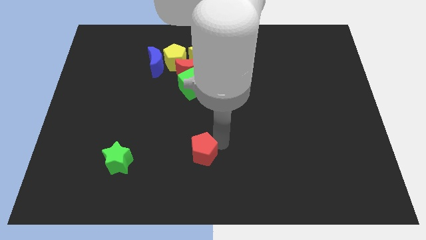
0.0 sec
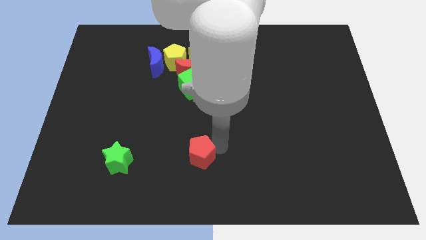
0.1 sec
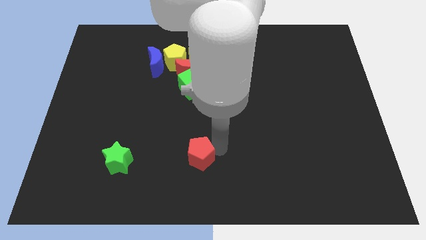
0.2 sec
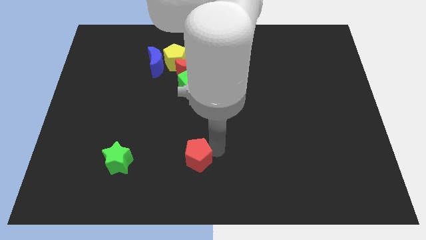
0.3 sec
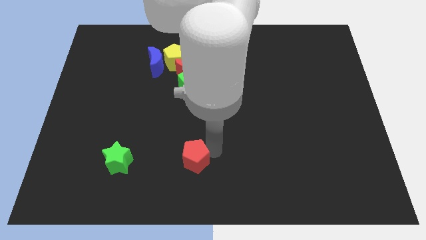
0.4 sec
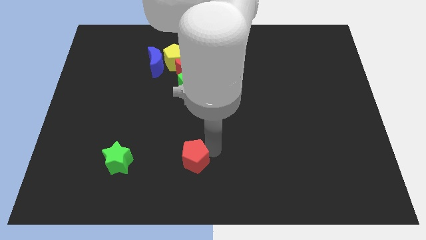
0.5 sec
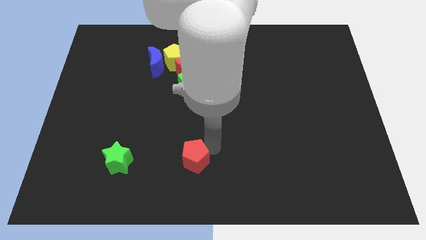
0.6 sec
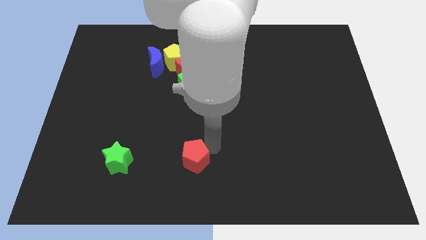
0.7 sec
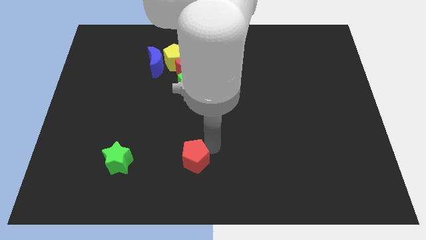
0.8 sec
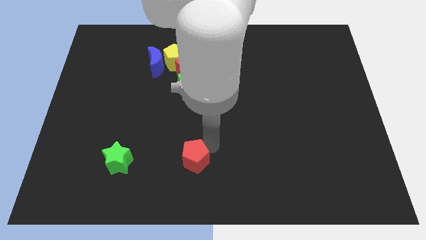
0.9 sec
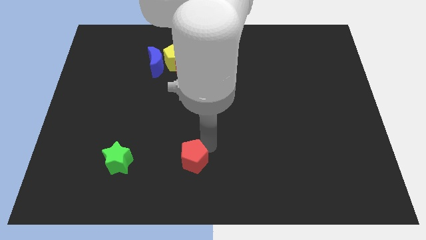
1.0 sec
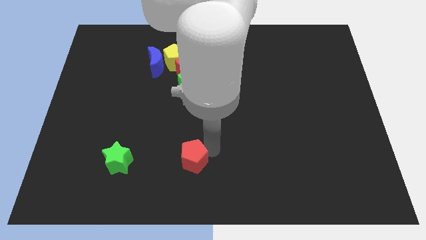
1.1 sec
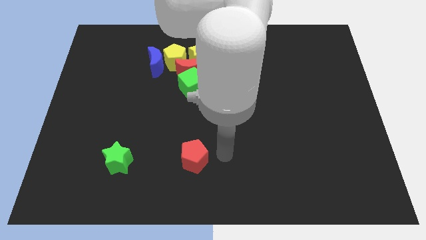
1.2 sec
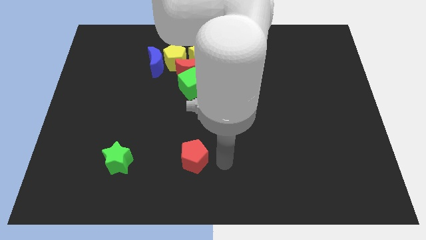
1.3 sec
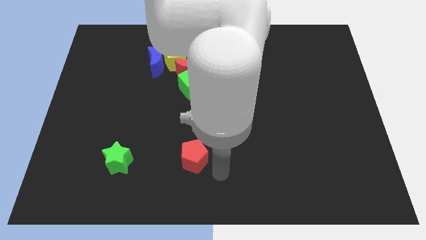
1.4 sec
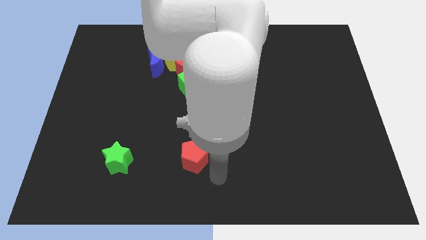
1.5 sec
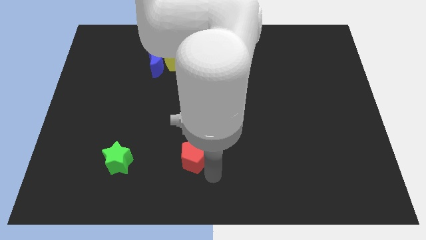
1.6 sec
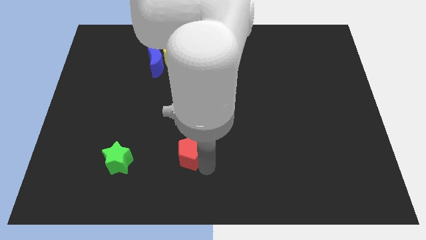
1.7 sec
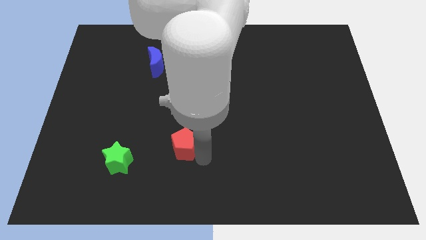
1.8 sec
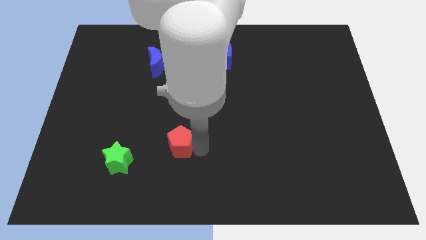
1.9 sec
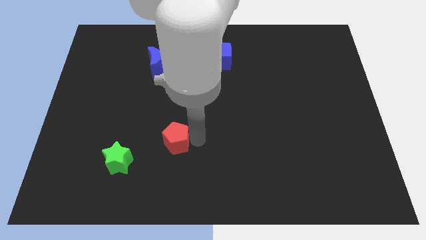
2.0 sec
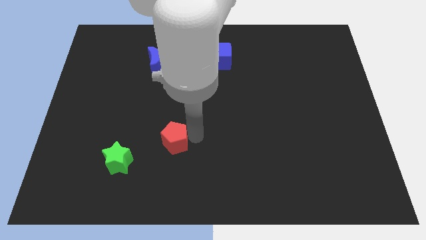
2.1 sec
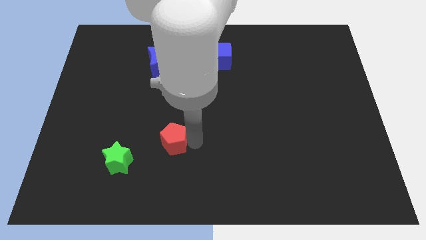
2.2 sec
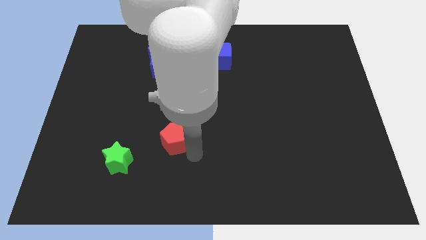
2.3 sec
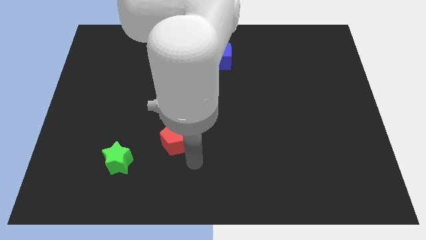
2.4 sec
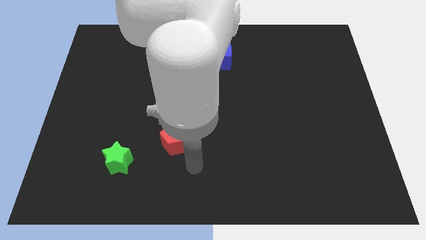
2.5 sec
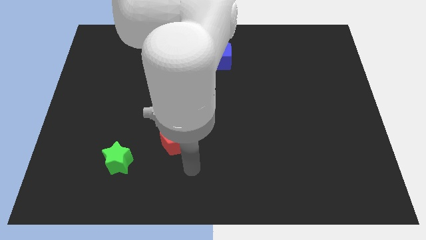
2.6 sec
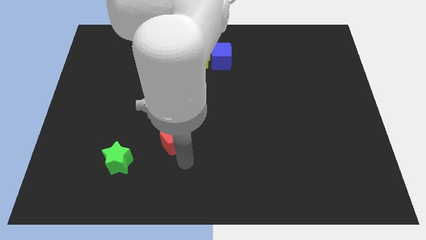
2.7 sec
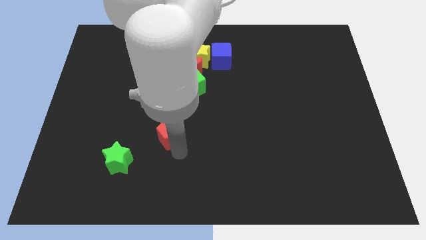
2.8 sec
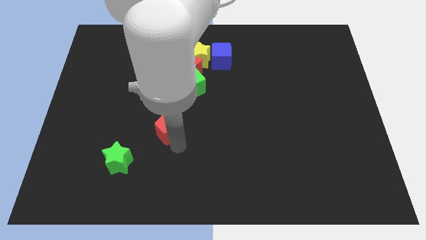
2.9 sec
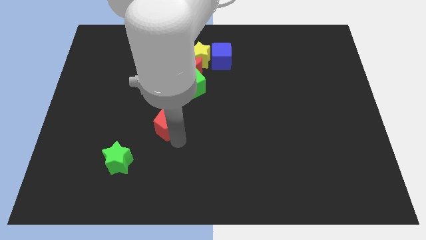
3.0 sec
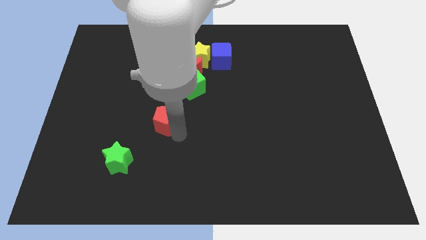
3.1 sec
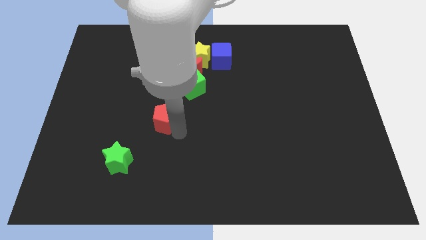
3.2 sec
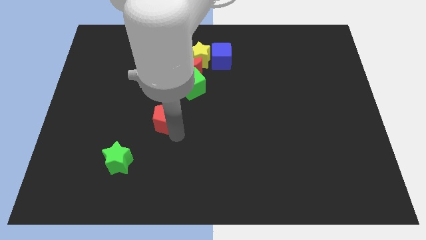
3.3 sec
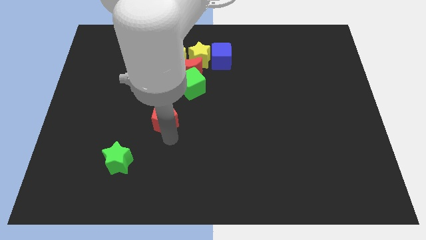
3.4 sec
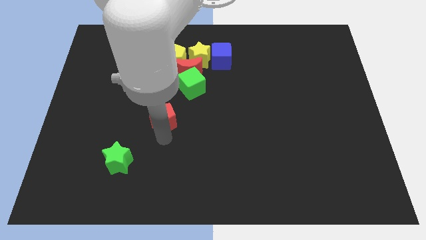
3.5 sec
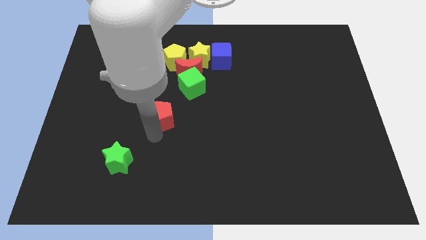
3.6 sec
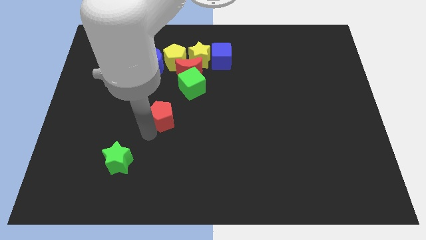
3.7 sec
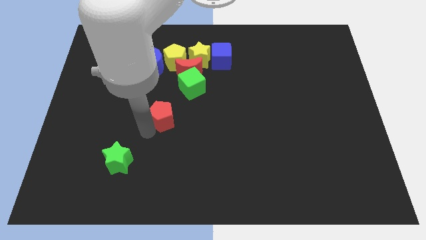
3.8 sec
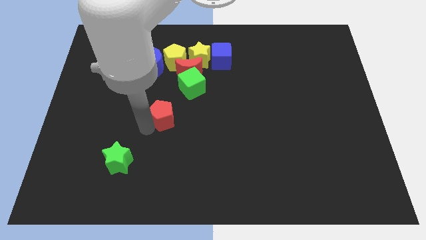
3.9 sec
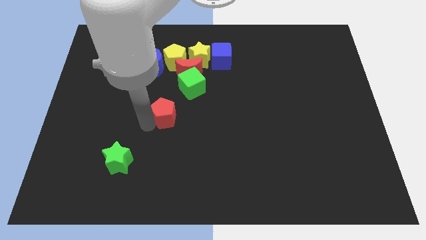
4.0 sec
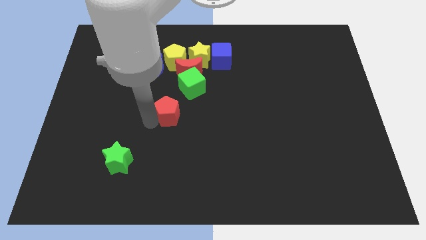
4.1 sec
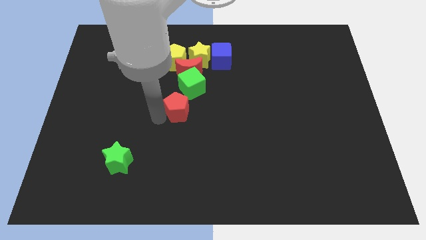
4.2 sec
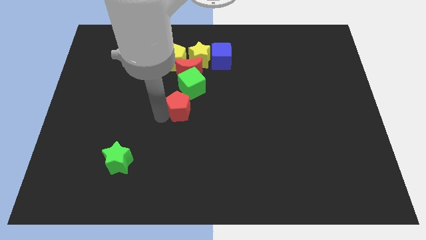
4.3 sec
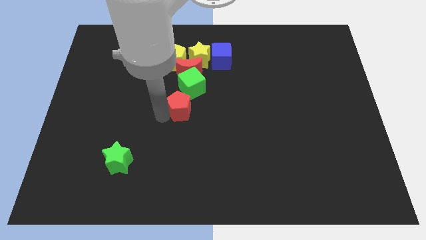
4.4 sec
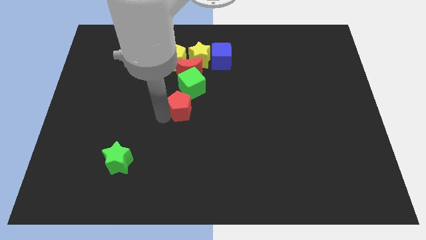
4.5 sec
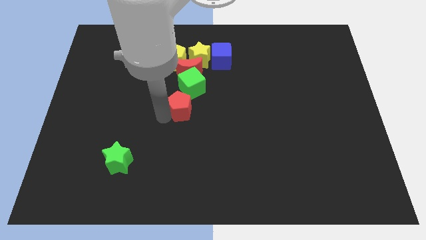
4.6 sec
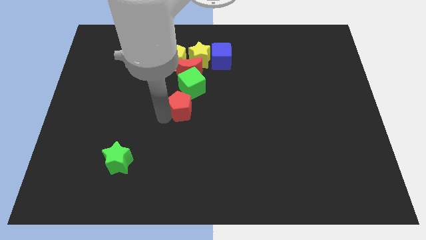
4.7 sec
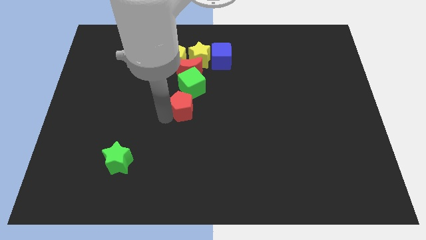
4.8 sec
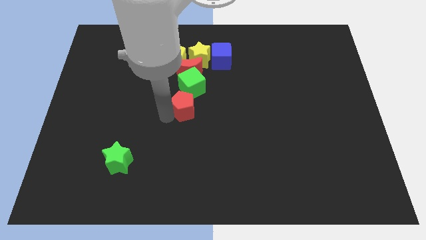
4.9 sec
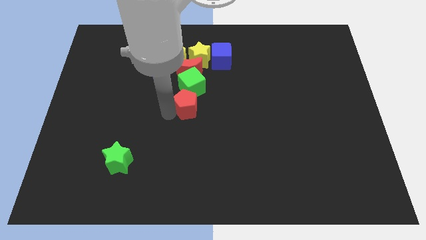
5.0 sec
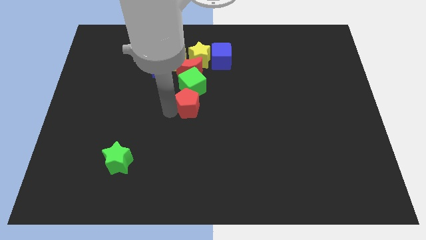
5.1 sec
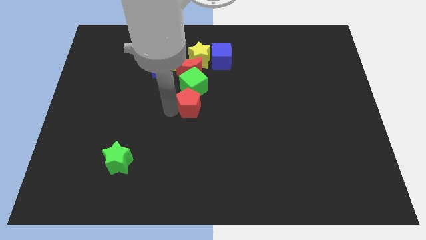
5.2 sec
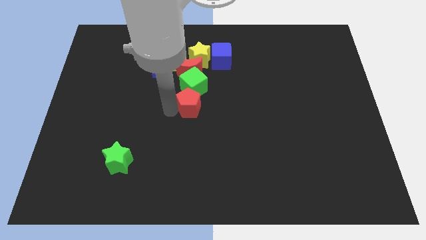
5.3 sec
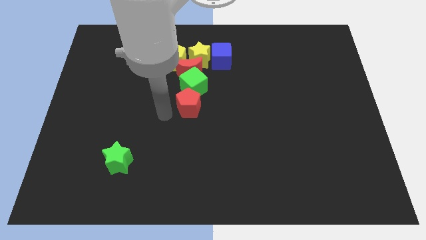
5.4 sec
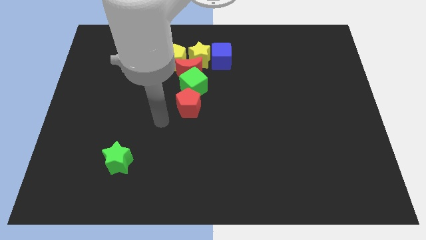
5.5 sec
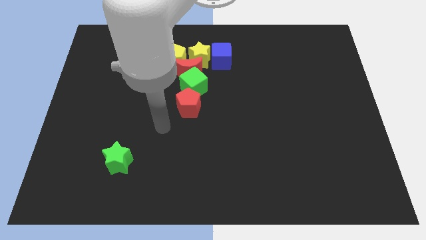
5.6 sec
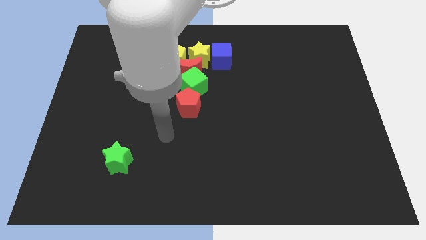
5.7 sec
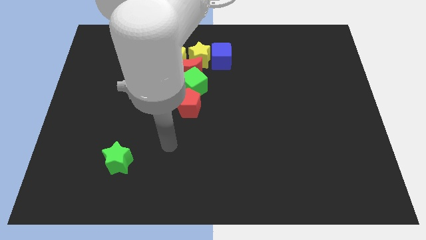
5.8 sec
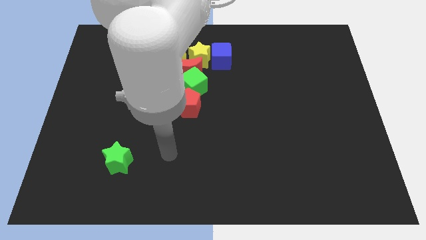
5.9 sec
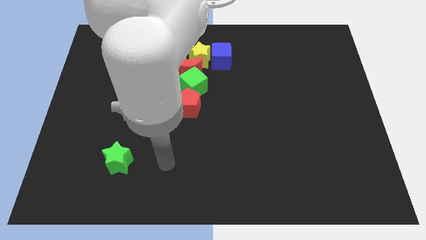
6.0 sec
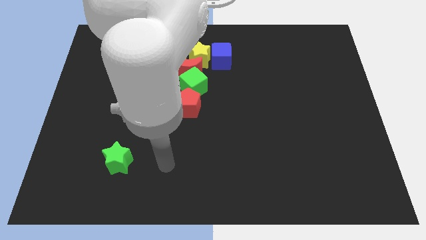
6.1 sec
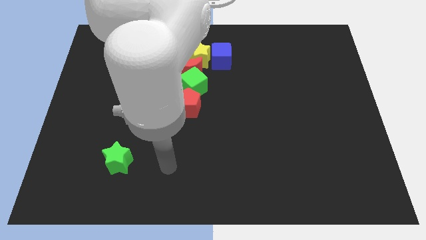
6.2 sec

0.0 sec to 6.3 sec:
push the red pentagon into the green cube

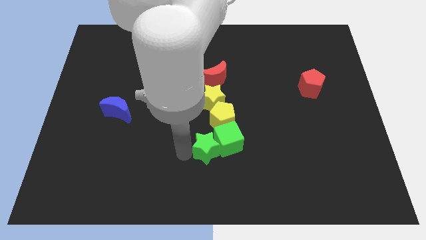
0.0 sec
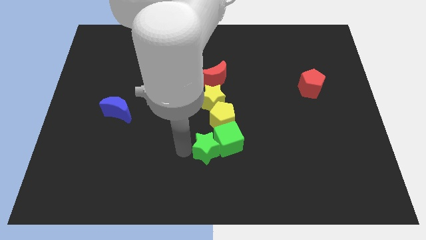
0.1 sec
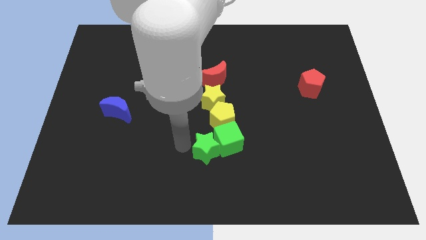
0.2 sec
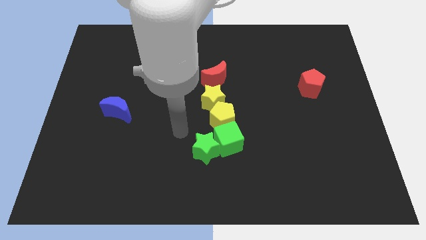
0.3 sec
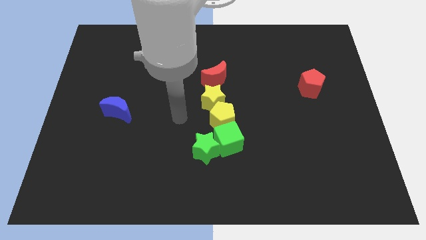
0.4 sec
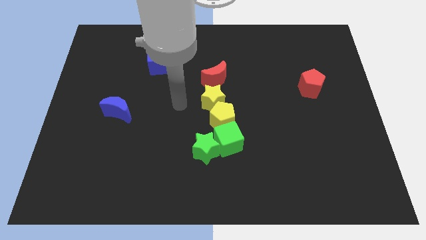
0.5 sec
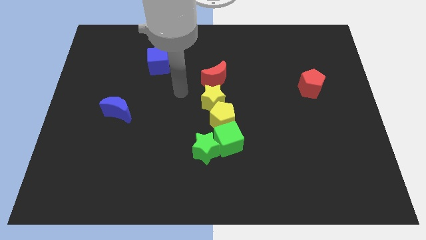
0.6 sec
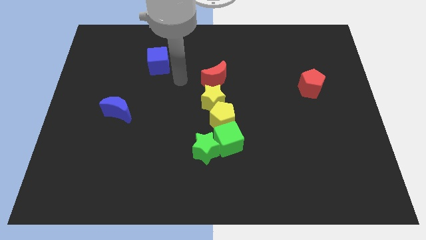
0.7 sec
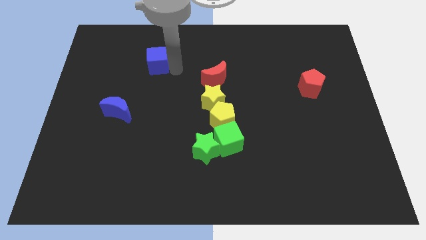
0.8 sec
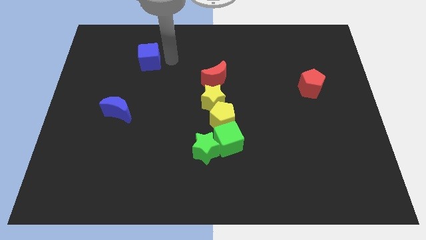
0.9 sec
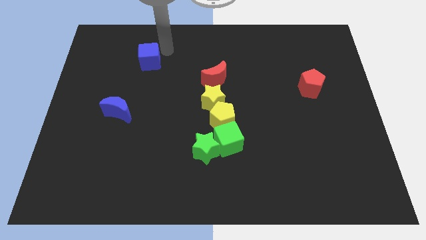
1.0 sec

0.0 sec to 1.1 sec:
move the arm away from the green star

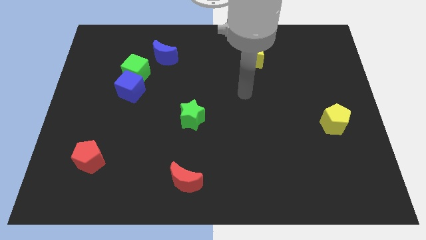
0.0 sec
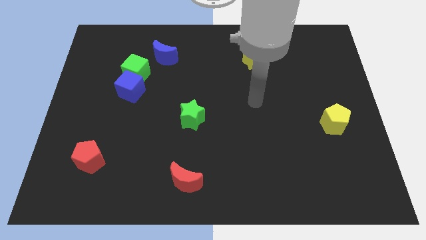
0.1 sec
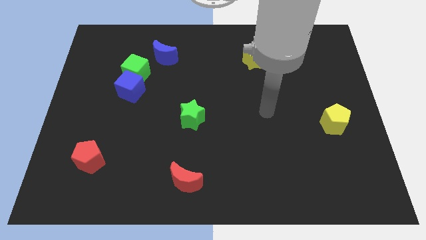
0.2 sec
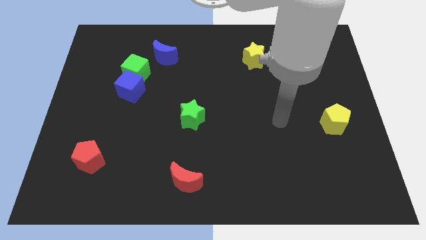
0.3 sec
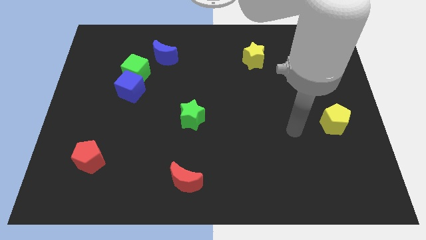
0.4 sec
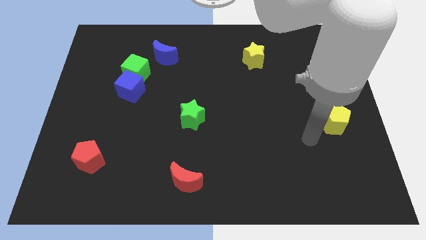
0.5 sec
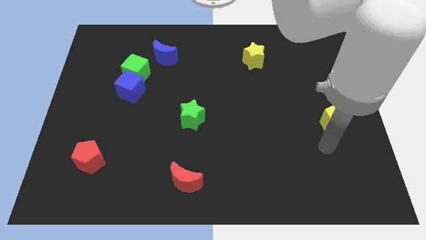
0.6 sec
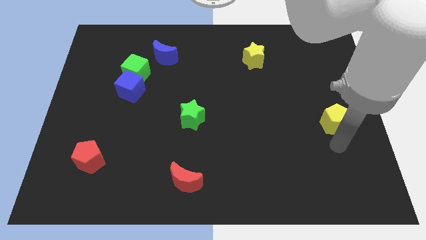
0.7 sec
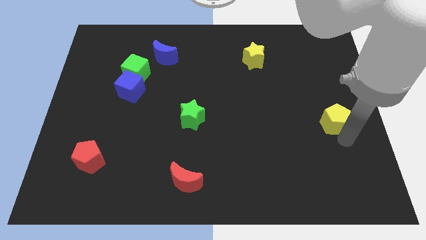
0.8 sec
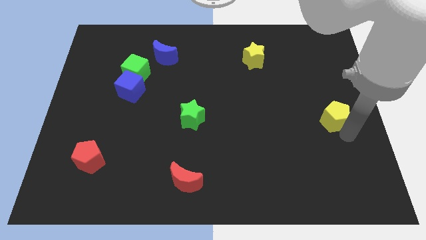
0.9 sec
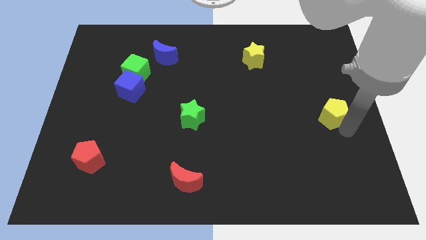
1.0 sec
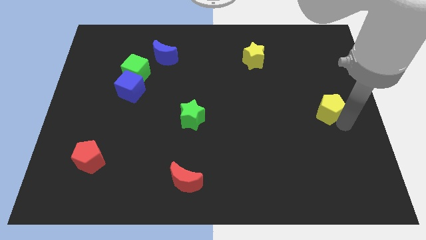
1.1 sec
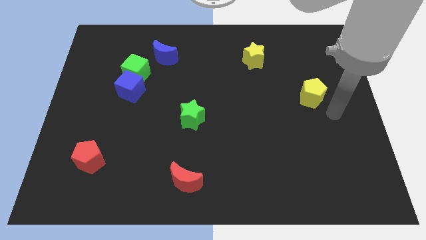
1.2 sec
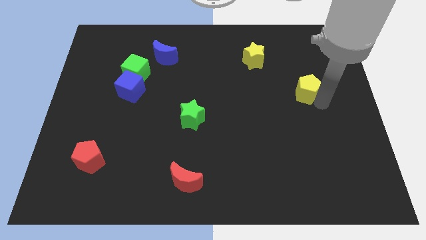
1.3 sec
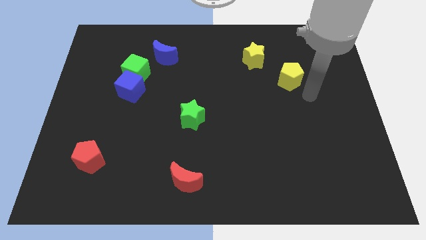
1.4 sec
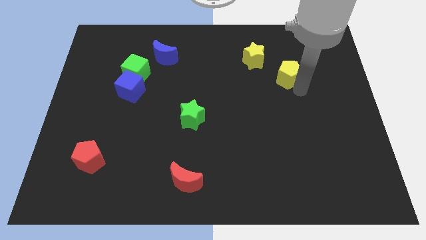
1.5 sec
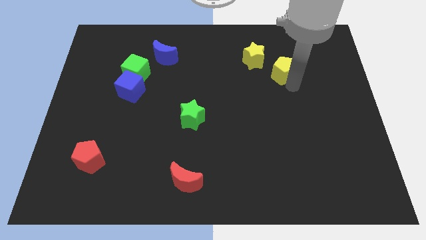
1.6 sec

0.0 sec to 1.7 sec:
move the yellow pentagon diagonally top right to the green star
